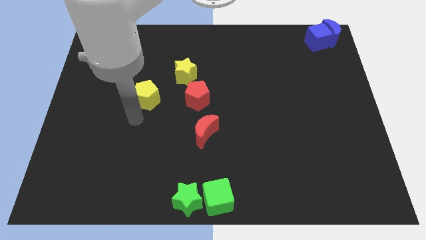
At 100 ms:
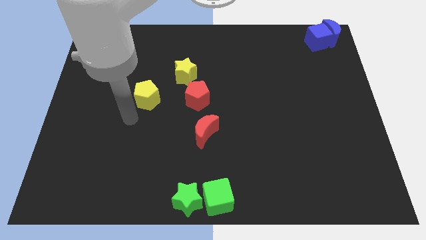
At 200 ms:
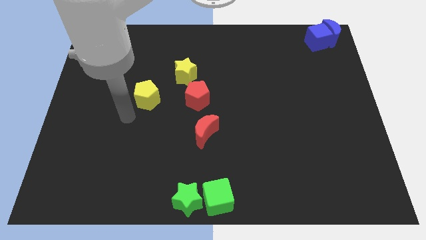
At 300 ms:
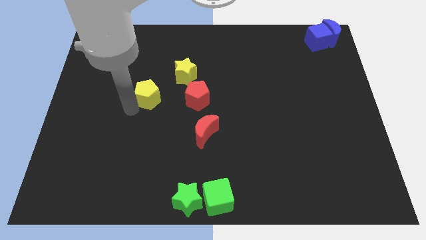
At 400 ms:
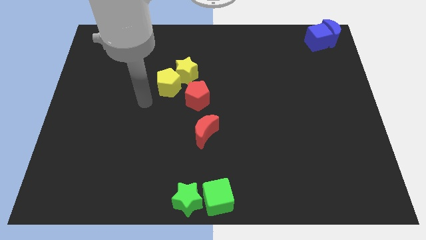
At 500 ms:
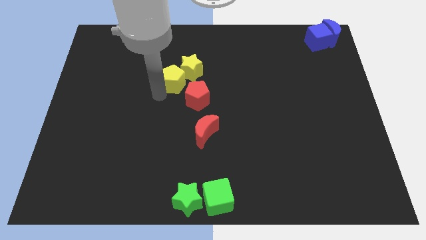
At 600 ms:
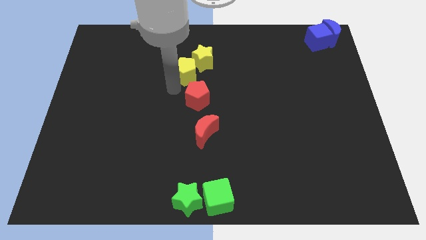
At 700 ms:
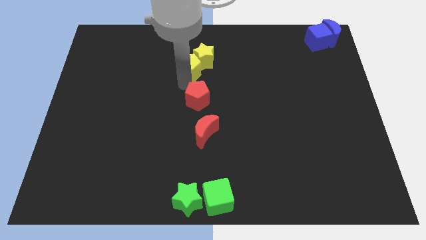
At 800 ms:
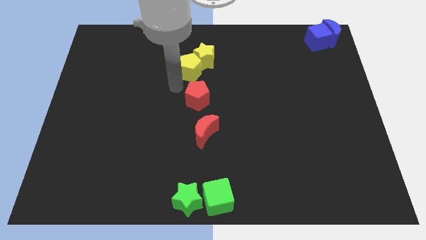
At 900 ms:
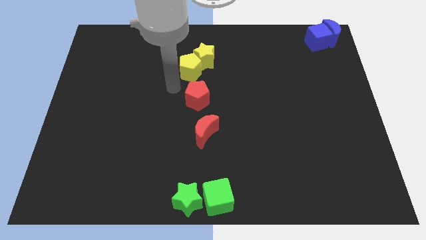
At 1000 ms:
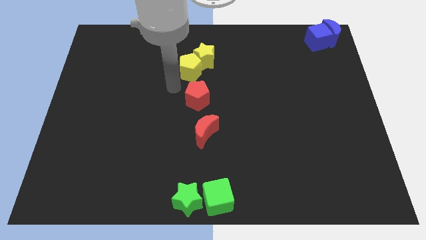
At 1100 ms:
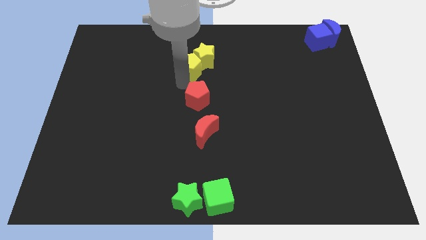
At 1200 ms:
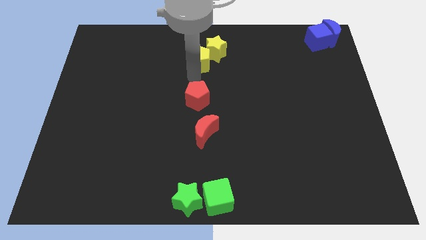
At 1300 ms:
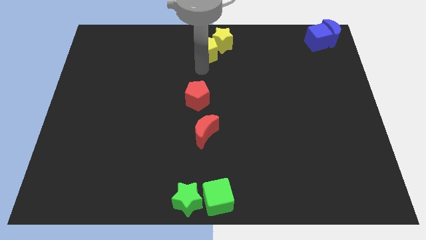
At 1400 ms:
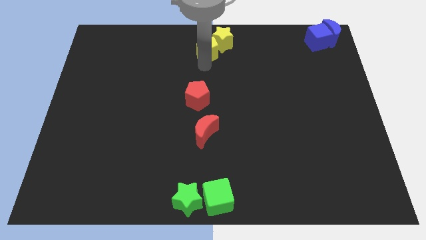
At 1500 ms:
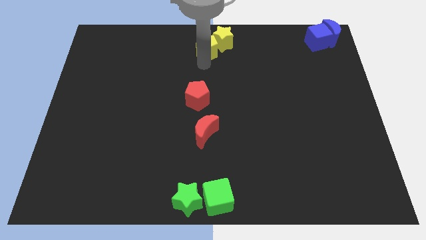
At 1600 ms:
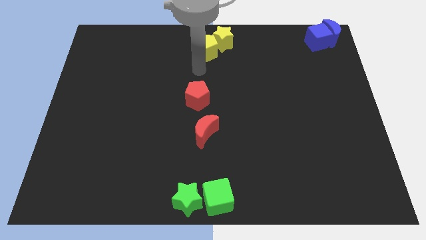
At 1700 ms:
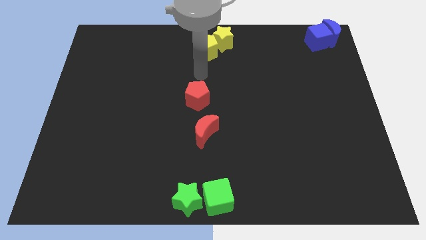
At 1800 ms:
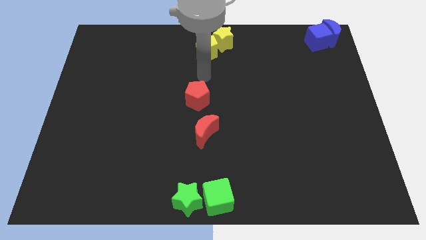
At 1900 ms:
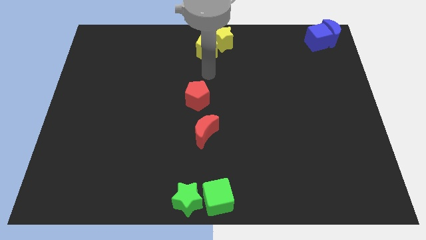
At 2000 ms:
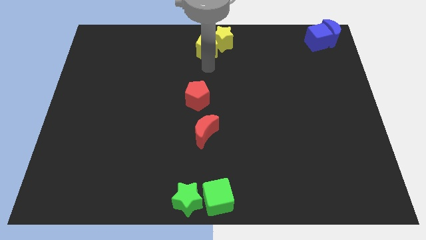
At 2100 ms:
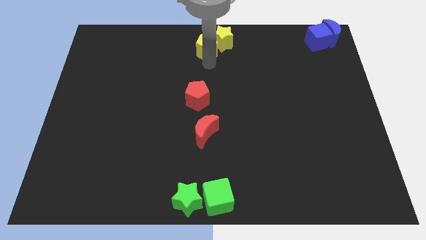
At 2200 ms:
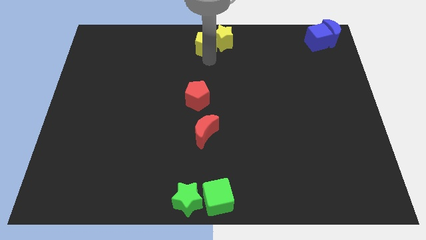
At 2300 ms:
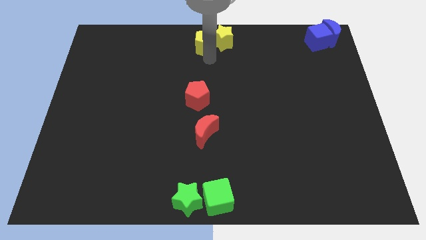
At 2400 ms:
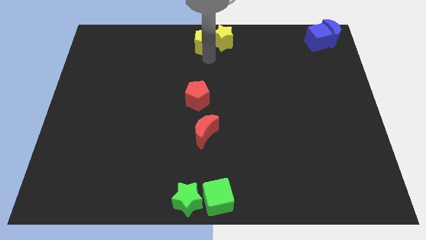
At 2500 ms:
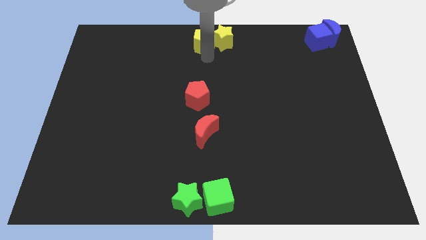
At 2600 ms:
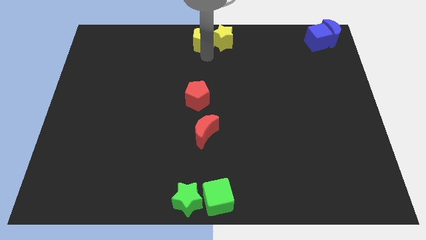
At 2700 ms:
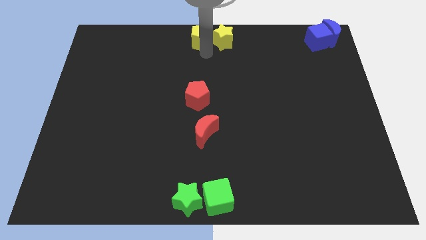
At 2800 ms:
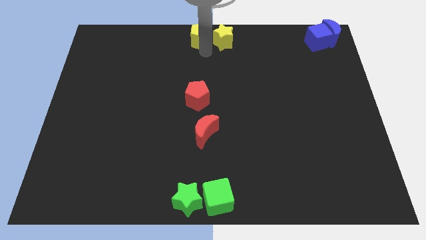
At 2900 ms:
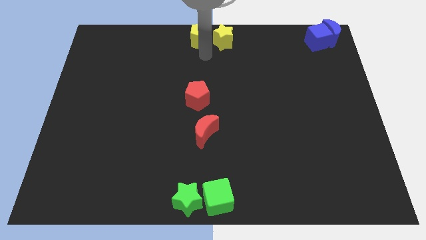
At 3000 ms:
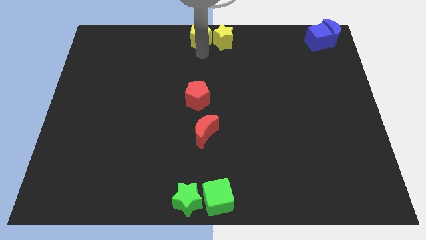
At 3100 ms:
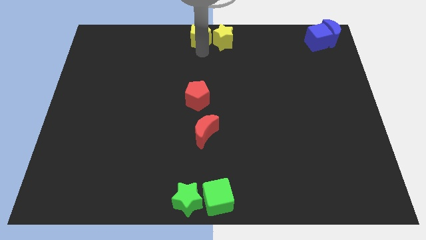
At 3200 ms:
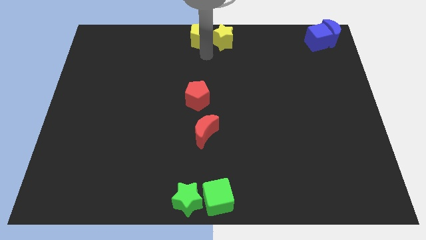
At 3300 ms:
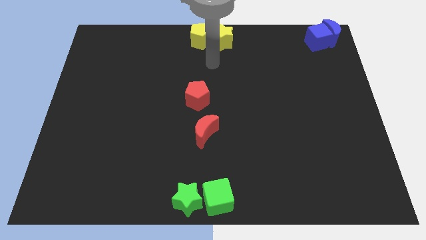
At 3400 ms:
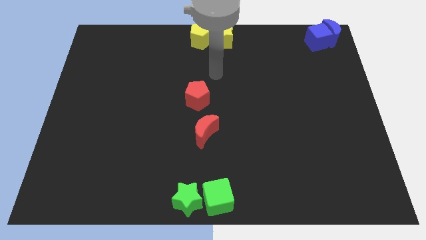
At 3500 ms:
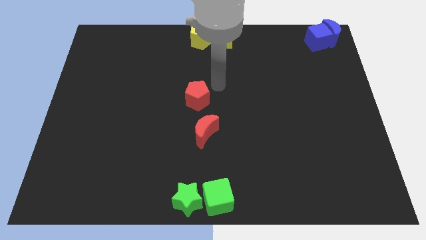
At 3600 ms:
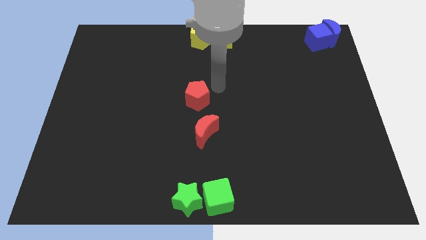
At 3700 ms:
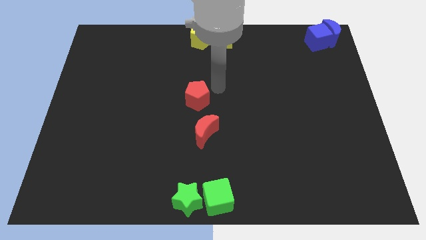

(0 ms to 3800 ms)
push the yellow blocks towards the top center of the board

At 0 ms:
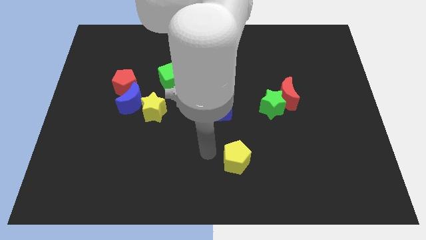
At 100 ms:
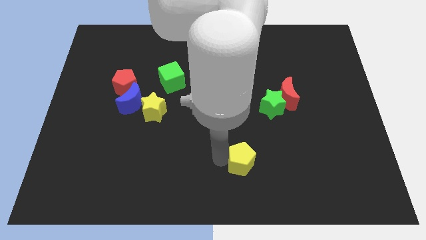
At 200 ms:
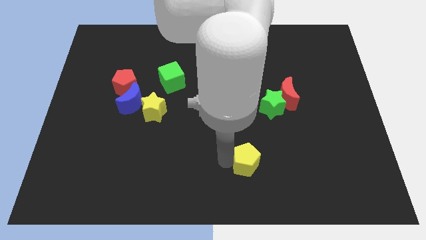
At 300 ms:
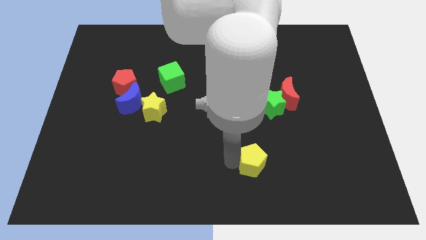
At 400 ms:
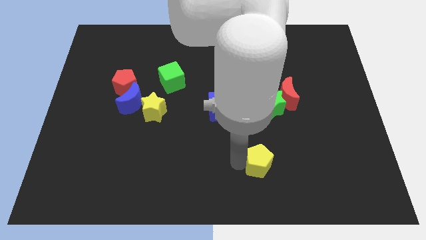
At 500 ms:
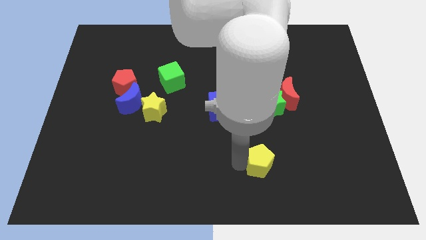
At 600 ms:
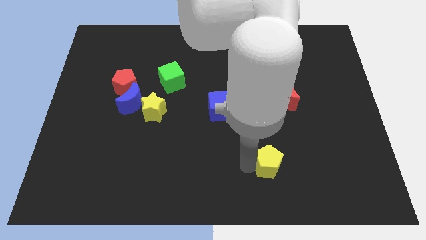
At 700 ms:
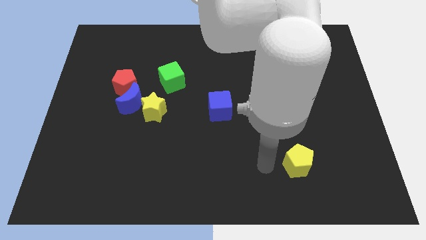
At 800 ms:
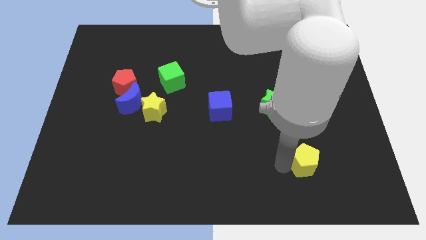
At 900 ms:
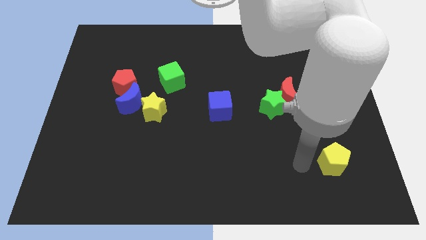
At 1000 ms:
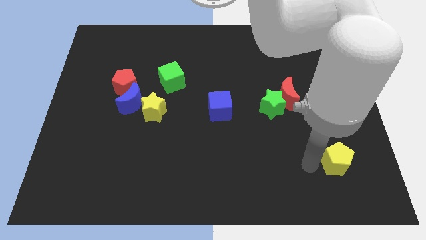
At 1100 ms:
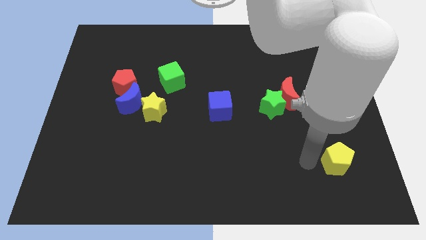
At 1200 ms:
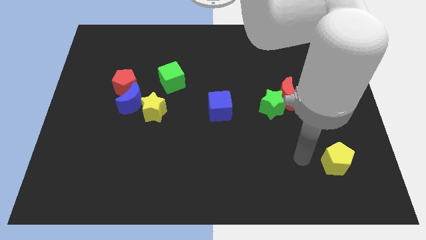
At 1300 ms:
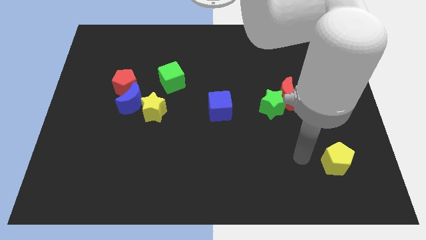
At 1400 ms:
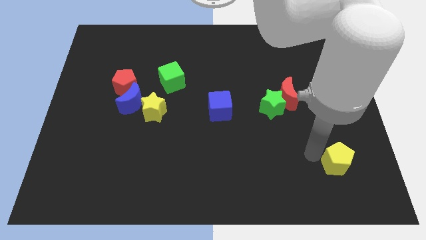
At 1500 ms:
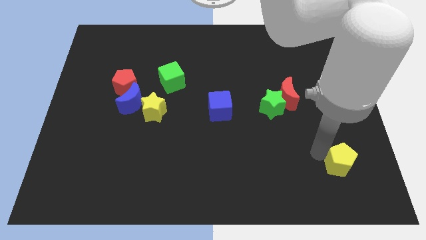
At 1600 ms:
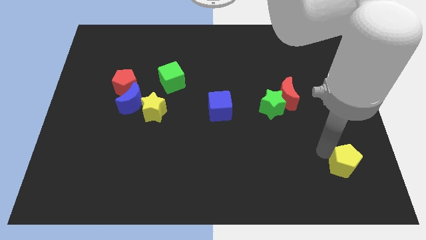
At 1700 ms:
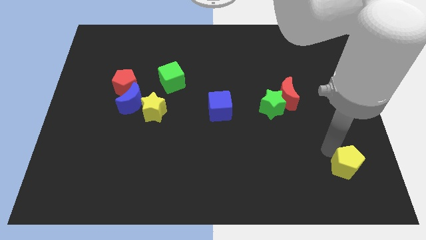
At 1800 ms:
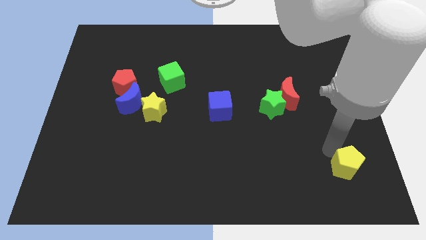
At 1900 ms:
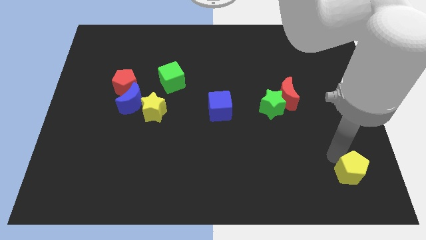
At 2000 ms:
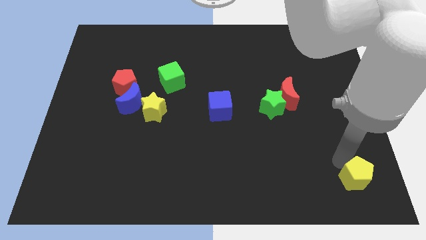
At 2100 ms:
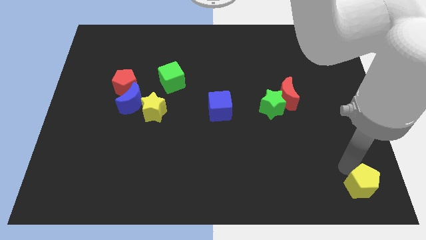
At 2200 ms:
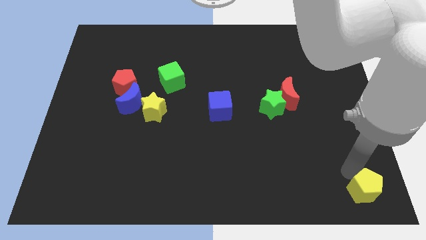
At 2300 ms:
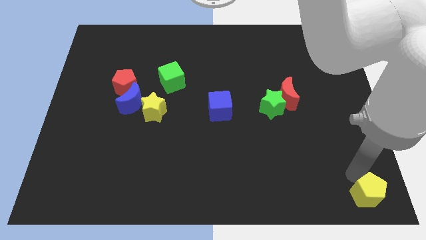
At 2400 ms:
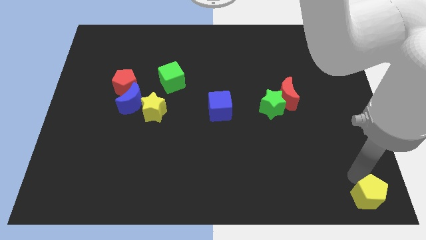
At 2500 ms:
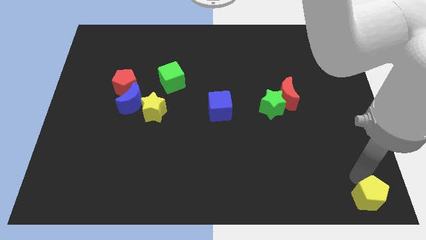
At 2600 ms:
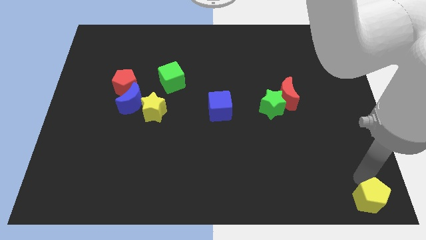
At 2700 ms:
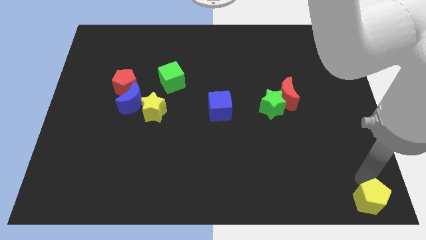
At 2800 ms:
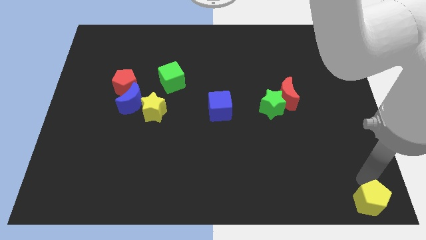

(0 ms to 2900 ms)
move the yellow pentagon to the bottom right corner of the board

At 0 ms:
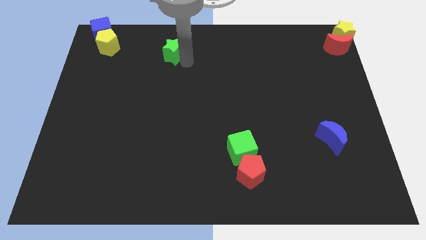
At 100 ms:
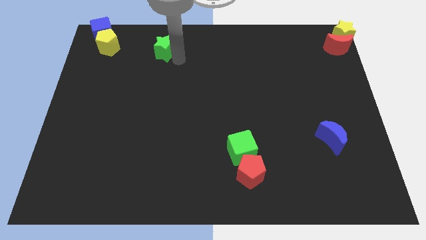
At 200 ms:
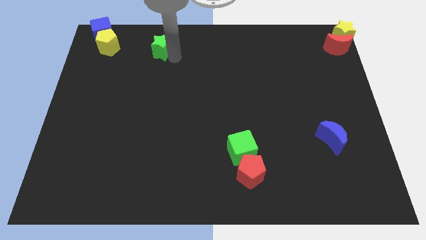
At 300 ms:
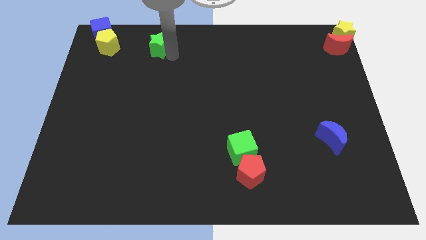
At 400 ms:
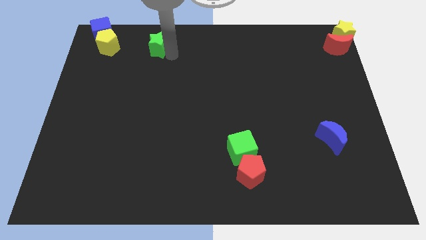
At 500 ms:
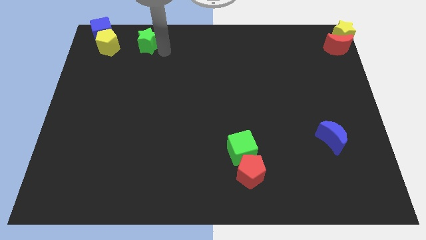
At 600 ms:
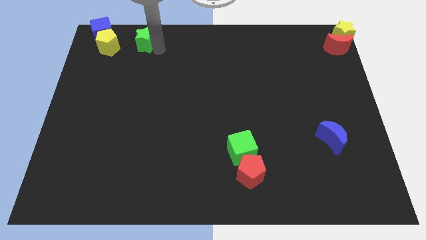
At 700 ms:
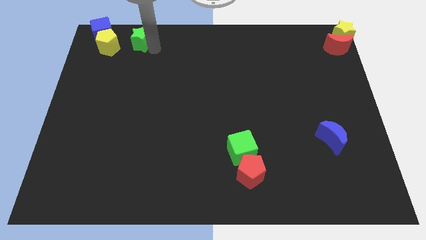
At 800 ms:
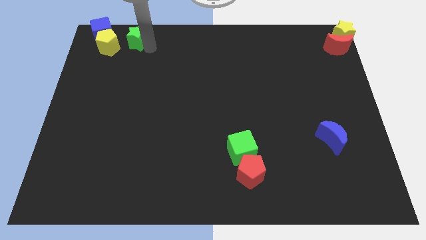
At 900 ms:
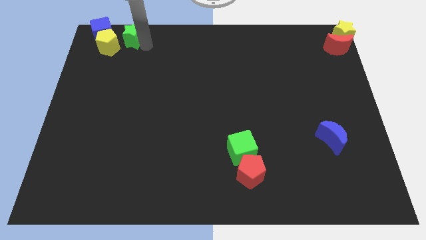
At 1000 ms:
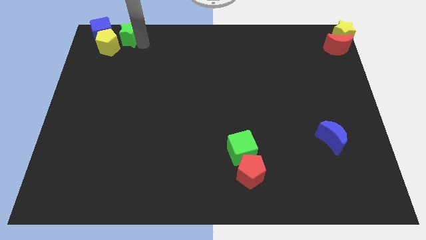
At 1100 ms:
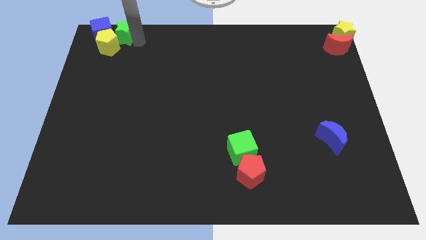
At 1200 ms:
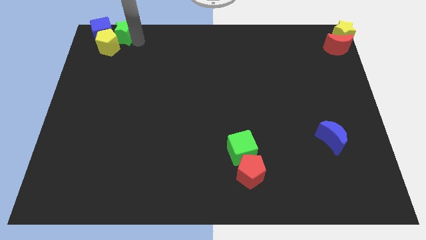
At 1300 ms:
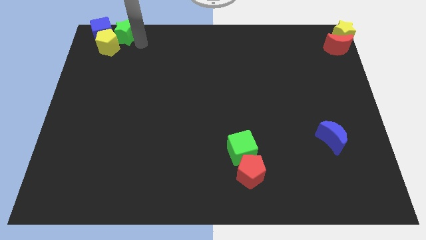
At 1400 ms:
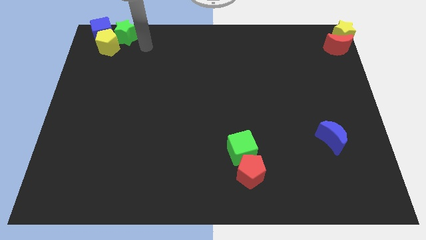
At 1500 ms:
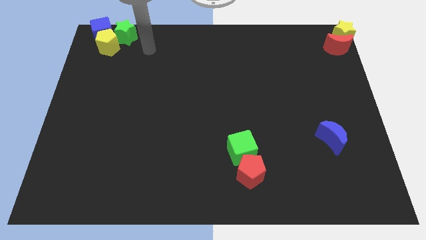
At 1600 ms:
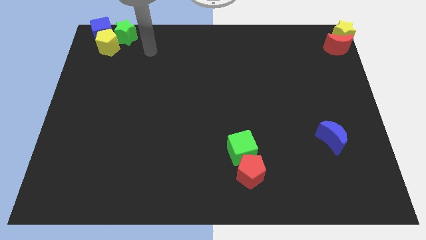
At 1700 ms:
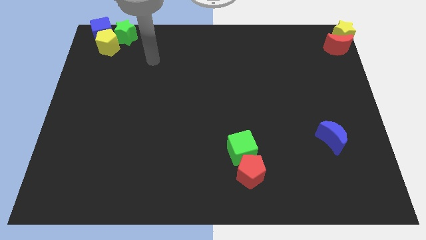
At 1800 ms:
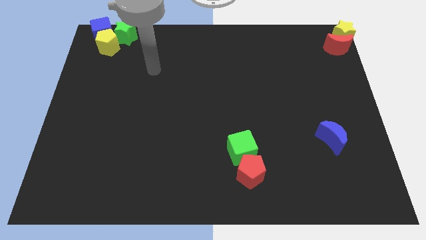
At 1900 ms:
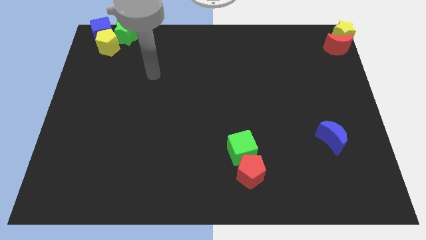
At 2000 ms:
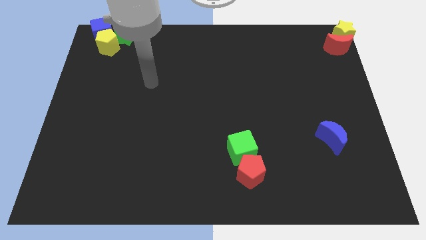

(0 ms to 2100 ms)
slide green star to the top left
